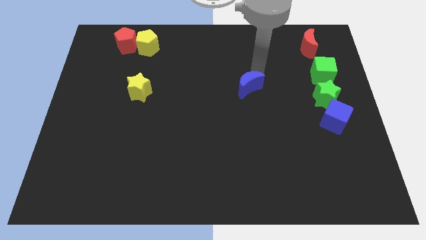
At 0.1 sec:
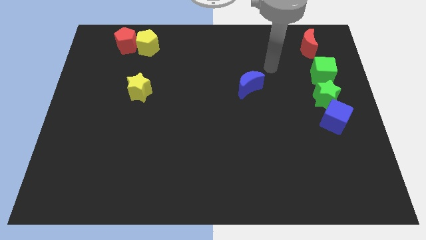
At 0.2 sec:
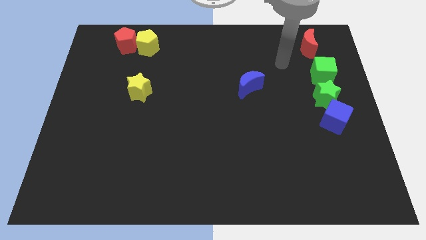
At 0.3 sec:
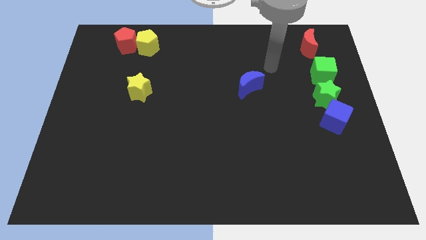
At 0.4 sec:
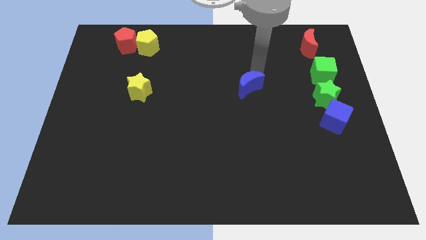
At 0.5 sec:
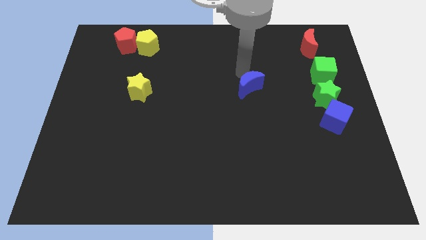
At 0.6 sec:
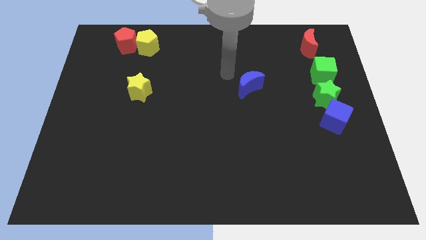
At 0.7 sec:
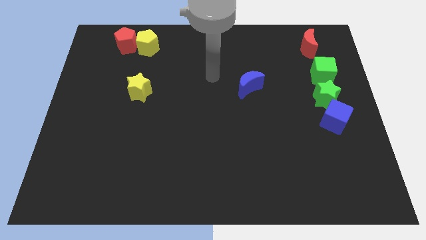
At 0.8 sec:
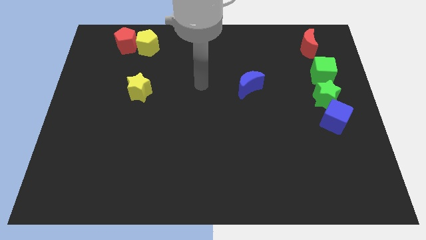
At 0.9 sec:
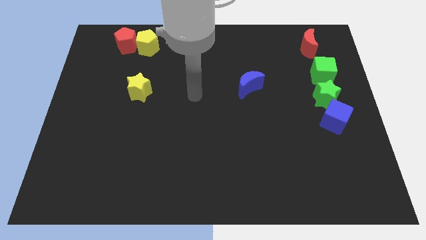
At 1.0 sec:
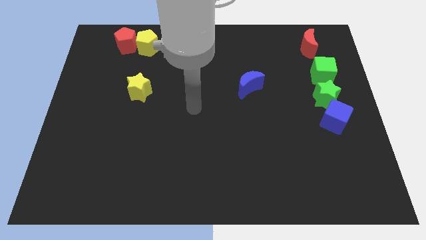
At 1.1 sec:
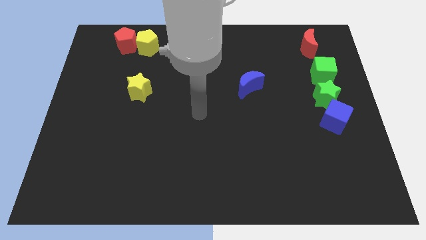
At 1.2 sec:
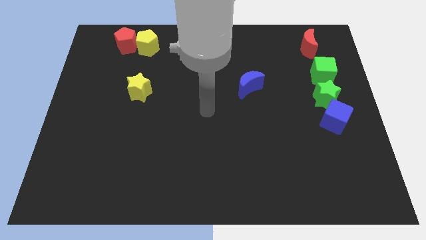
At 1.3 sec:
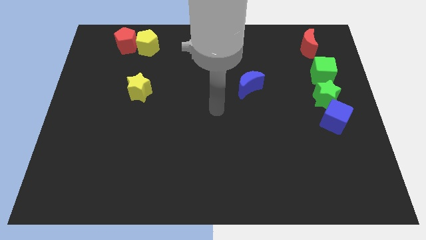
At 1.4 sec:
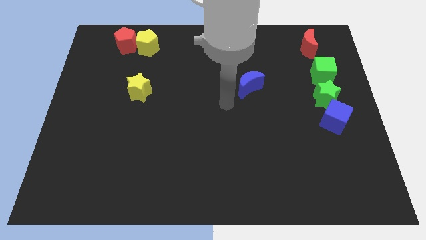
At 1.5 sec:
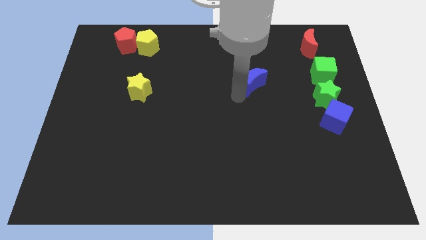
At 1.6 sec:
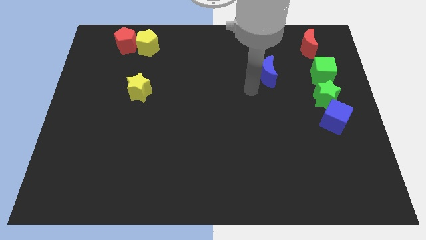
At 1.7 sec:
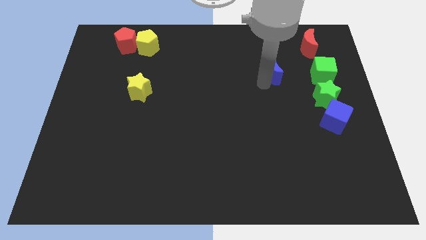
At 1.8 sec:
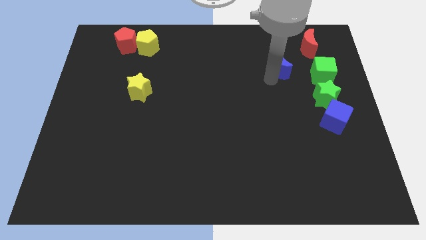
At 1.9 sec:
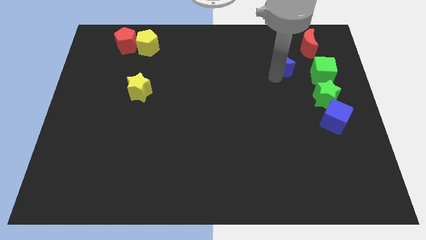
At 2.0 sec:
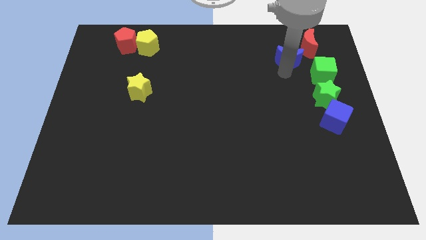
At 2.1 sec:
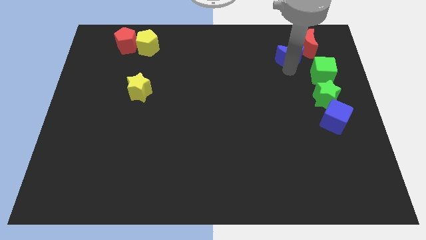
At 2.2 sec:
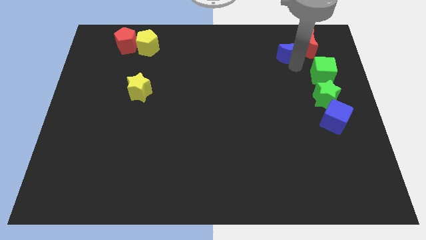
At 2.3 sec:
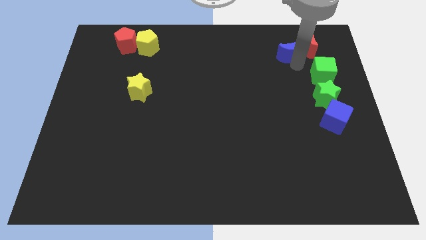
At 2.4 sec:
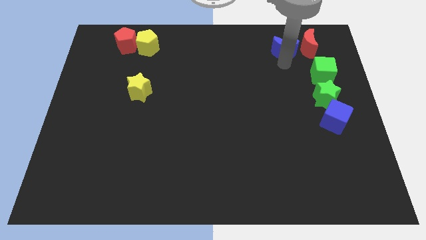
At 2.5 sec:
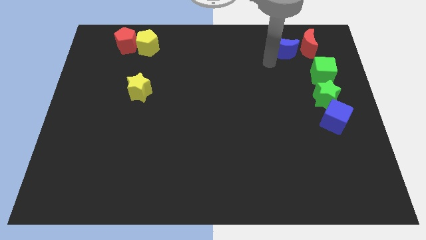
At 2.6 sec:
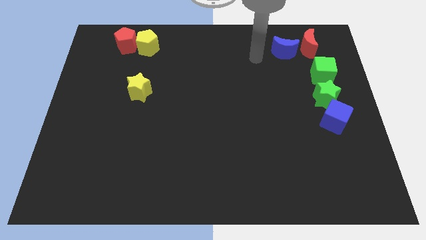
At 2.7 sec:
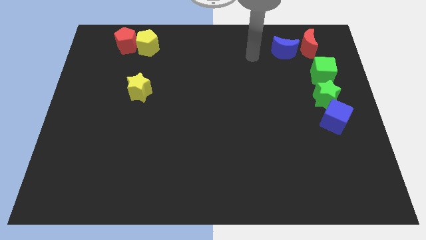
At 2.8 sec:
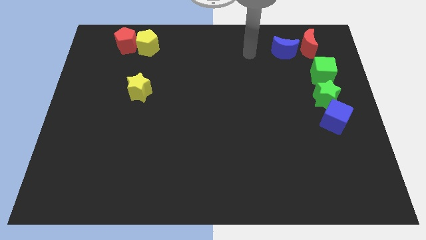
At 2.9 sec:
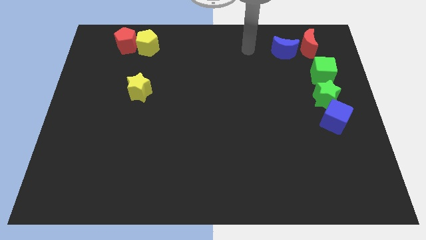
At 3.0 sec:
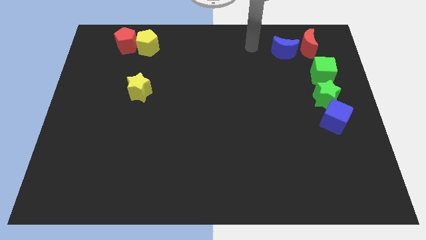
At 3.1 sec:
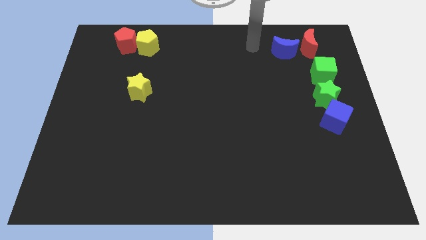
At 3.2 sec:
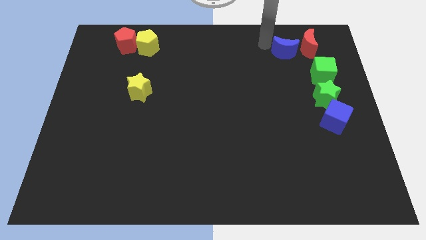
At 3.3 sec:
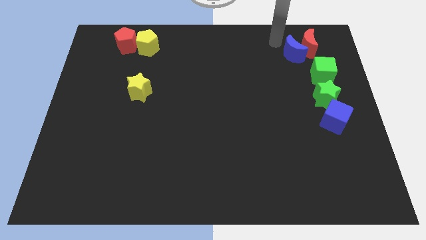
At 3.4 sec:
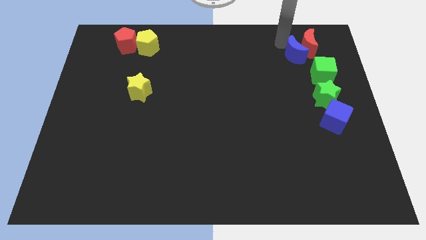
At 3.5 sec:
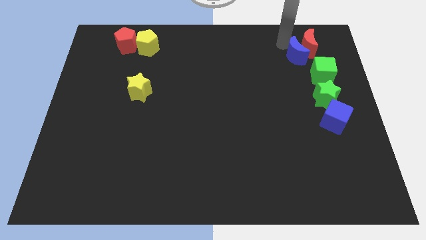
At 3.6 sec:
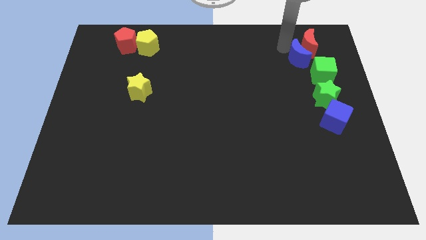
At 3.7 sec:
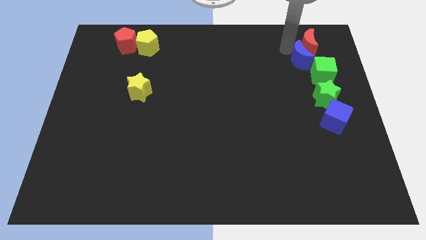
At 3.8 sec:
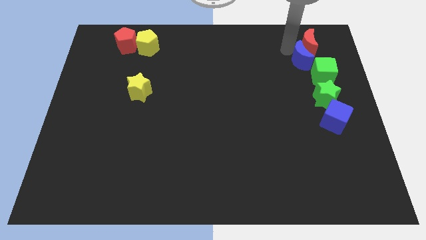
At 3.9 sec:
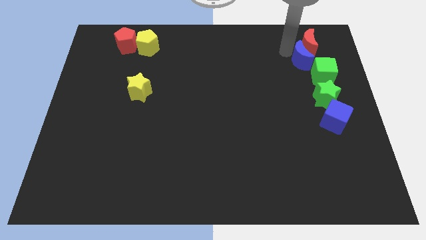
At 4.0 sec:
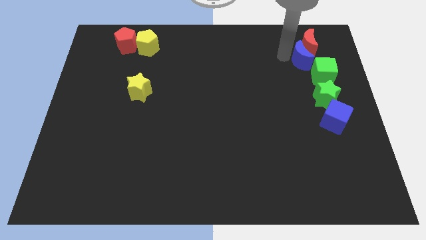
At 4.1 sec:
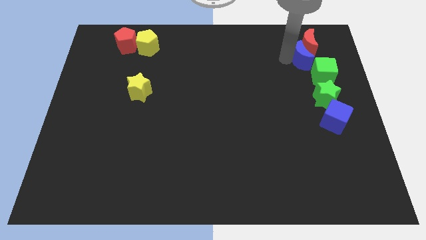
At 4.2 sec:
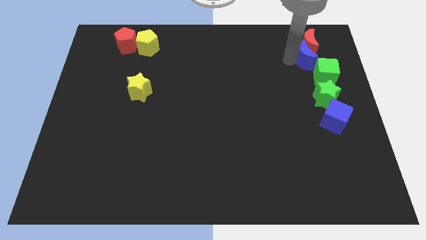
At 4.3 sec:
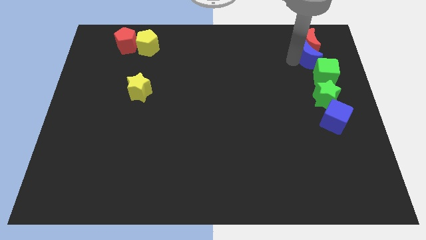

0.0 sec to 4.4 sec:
push blue crescent near to the bottom right of the red crescent

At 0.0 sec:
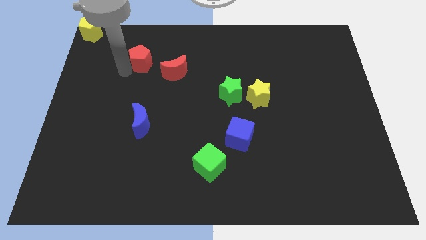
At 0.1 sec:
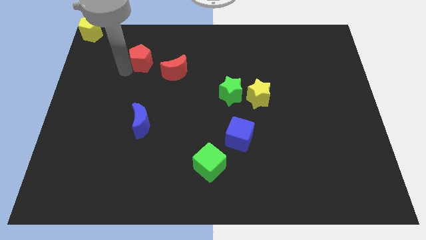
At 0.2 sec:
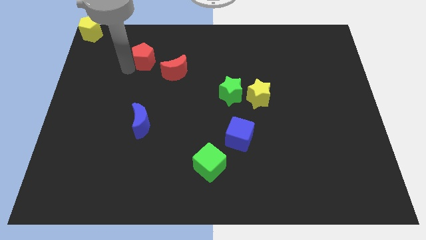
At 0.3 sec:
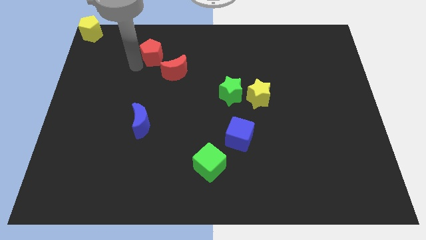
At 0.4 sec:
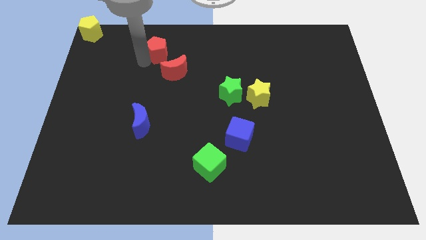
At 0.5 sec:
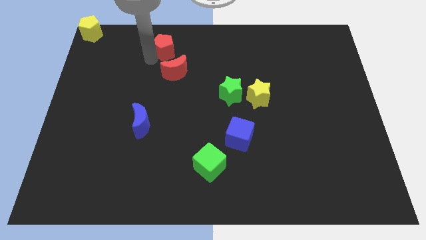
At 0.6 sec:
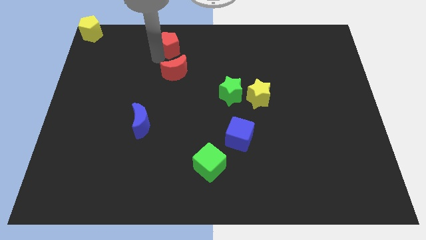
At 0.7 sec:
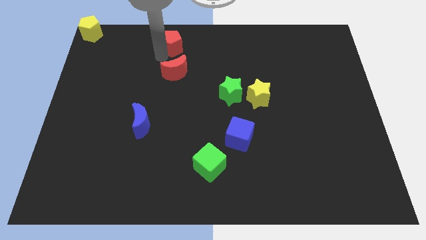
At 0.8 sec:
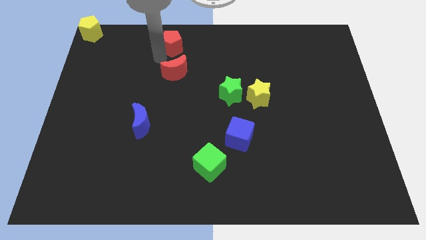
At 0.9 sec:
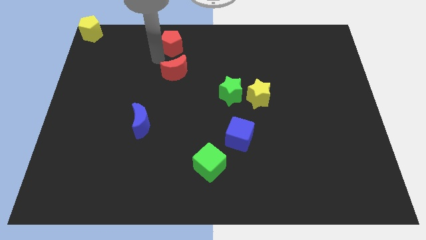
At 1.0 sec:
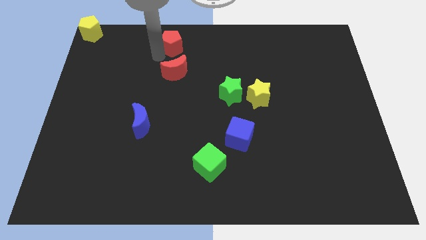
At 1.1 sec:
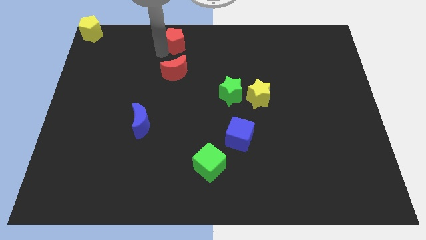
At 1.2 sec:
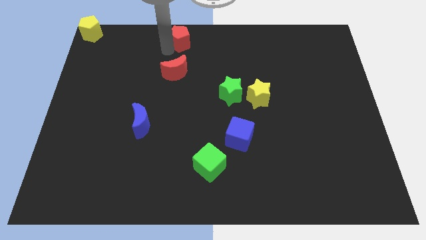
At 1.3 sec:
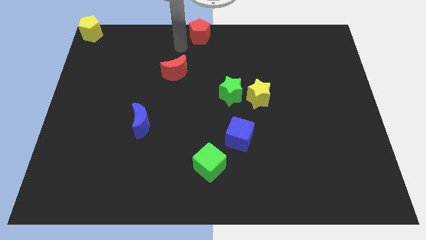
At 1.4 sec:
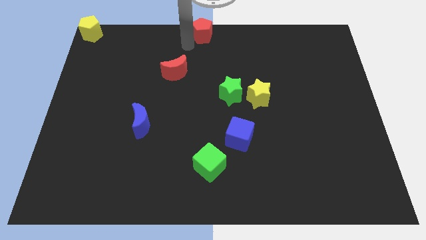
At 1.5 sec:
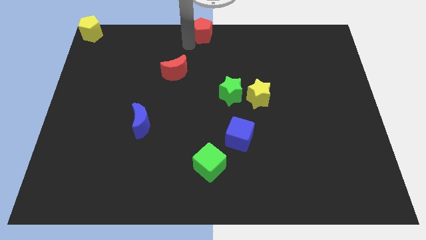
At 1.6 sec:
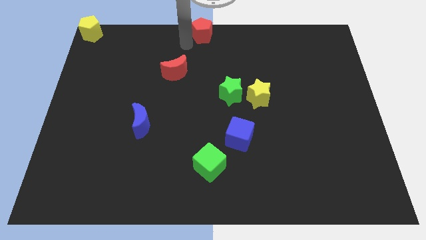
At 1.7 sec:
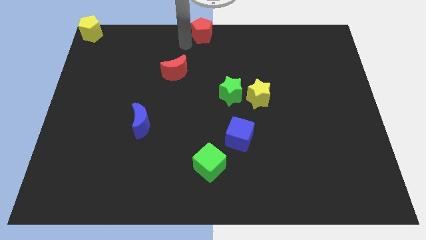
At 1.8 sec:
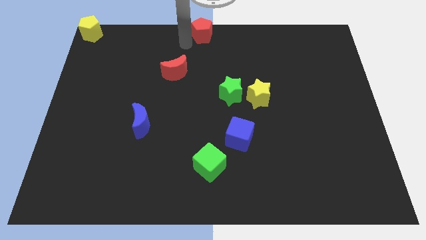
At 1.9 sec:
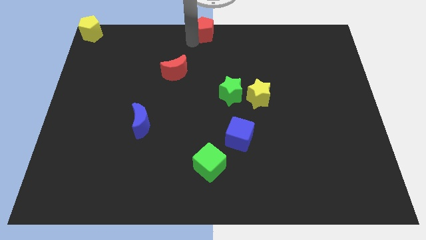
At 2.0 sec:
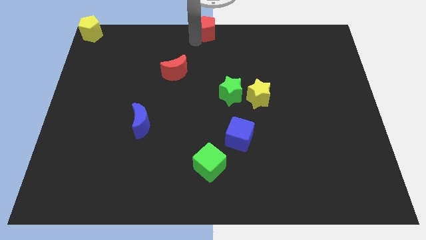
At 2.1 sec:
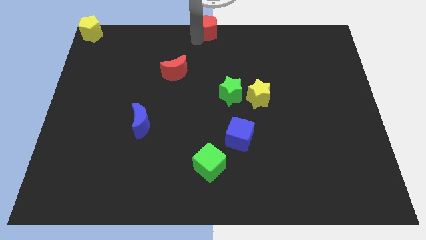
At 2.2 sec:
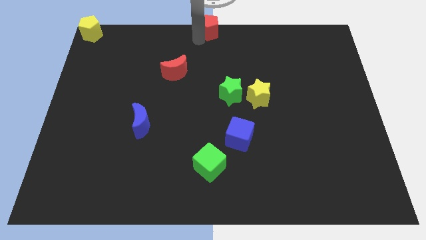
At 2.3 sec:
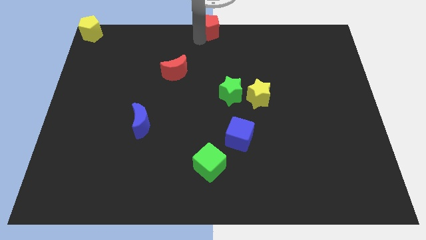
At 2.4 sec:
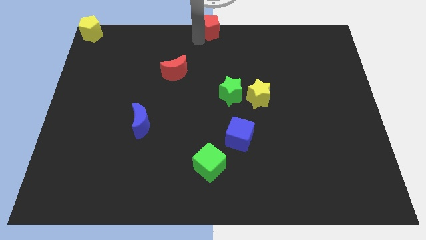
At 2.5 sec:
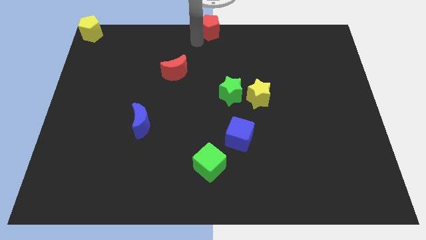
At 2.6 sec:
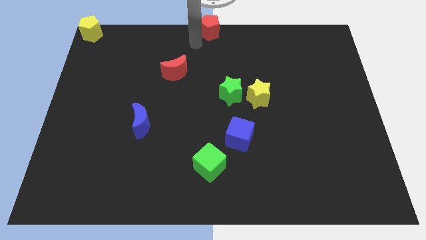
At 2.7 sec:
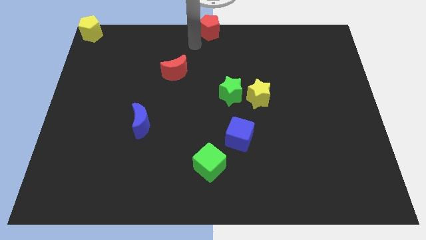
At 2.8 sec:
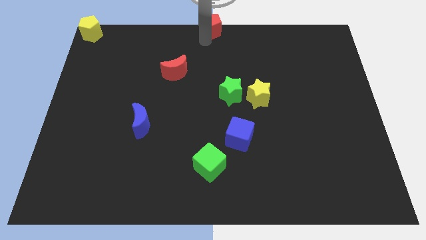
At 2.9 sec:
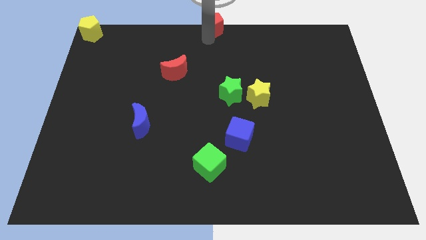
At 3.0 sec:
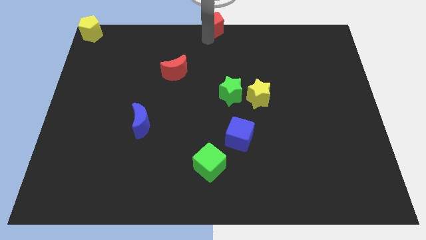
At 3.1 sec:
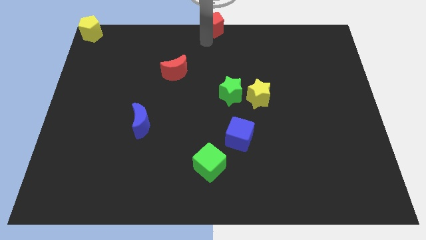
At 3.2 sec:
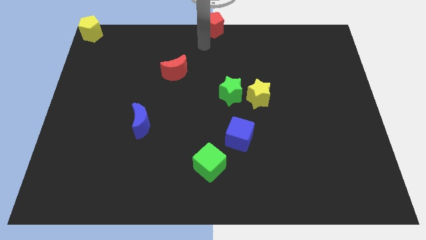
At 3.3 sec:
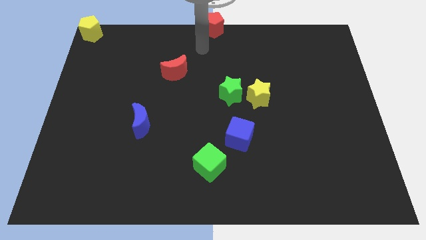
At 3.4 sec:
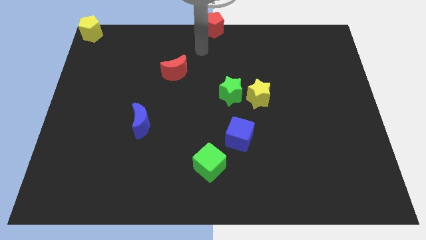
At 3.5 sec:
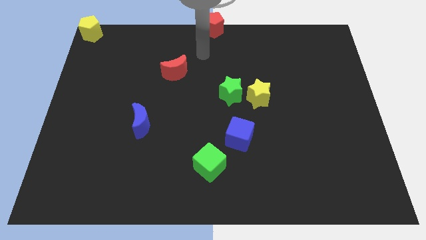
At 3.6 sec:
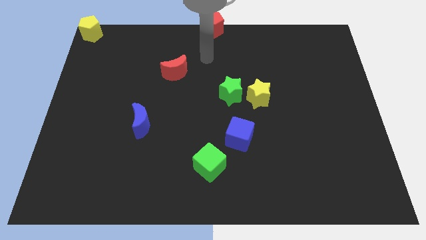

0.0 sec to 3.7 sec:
place red pentagon to the top center of the board

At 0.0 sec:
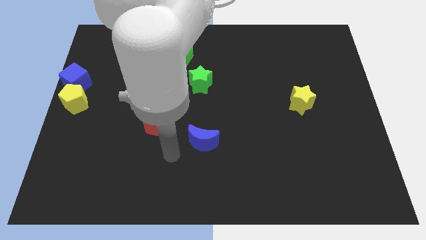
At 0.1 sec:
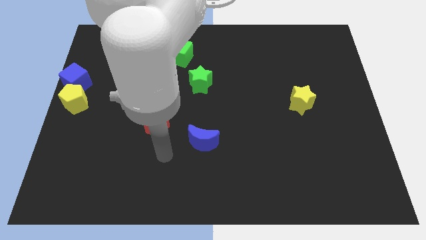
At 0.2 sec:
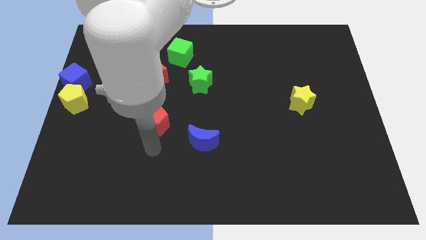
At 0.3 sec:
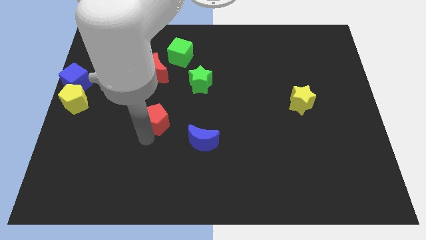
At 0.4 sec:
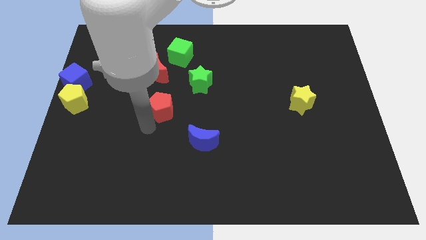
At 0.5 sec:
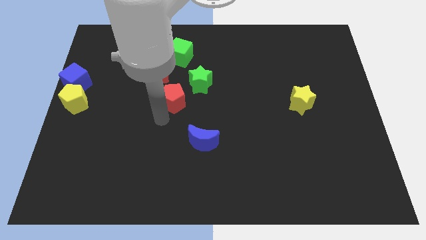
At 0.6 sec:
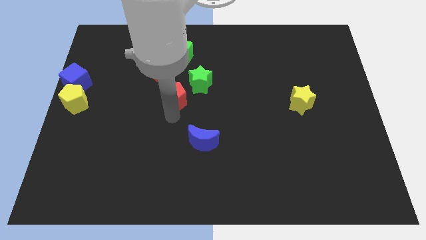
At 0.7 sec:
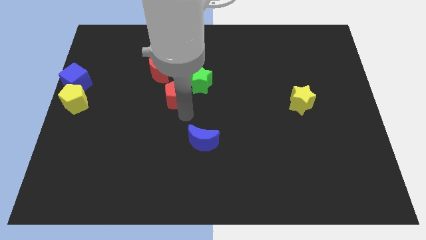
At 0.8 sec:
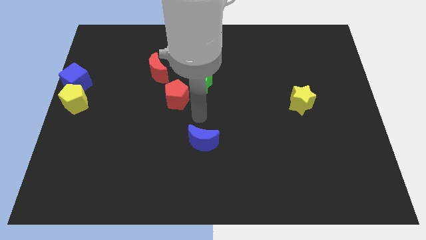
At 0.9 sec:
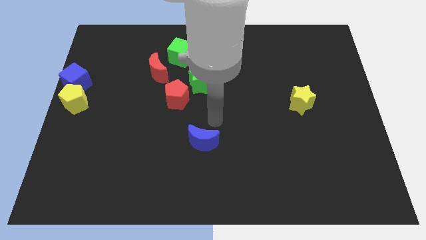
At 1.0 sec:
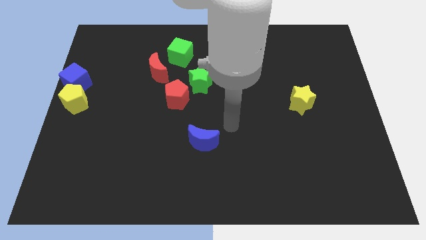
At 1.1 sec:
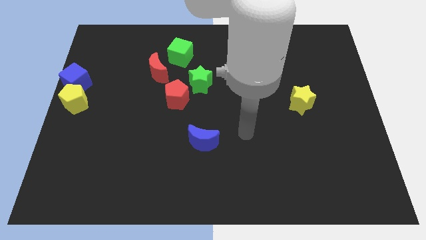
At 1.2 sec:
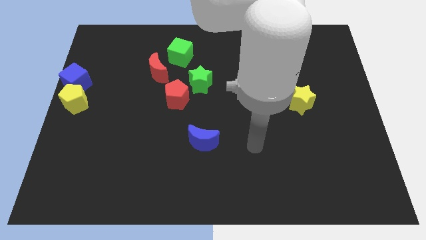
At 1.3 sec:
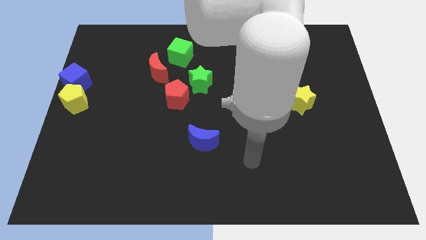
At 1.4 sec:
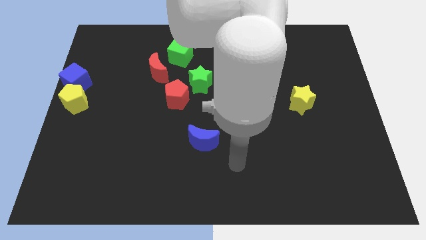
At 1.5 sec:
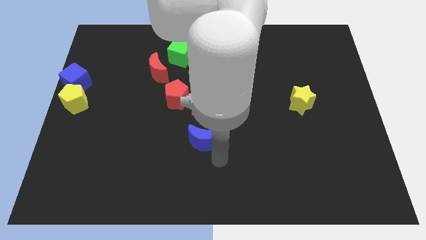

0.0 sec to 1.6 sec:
move the red pentagon slightly upwards
